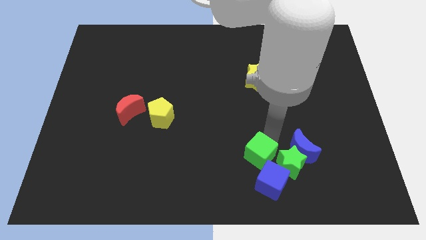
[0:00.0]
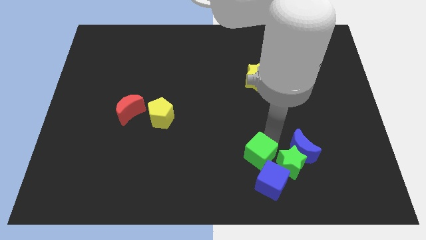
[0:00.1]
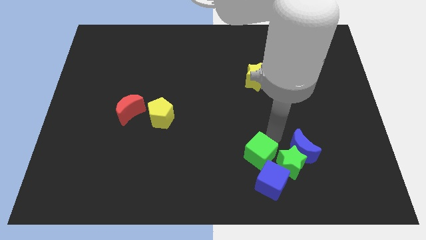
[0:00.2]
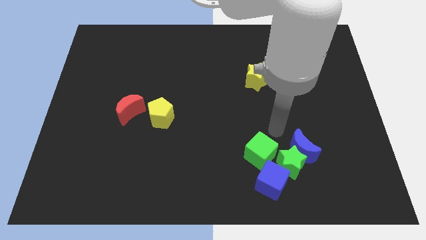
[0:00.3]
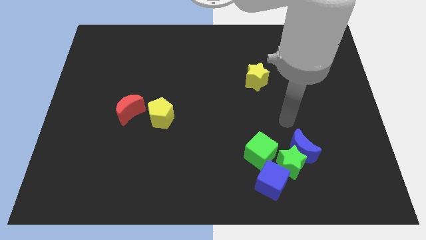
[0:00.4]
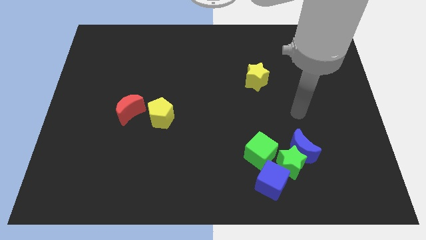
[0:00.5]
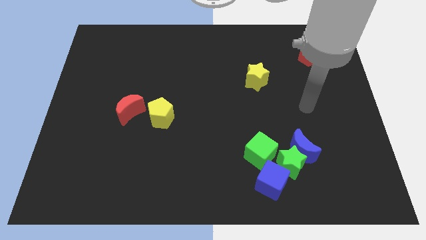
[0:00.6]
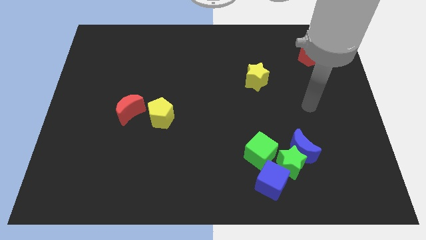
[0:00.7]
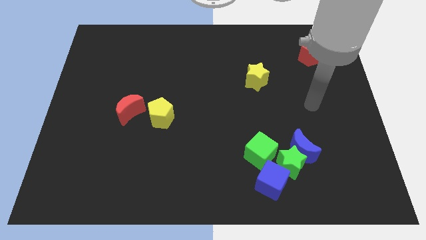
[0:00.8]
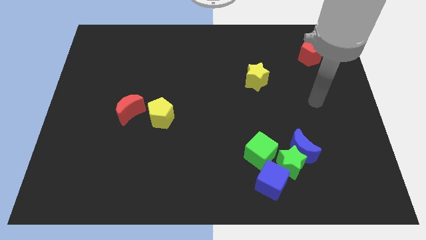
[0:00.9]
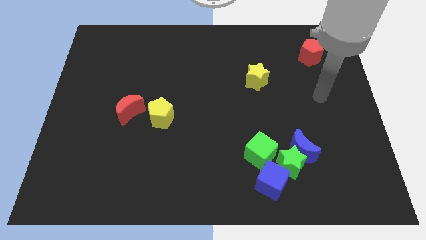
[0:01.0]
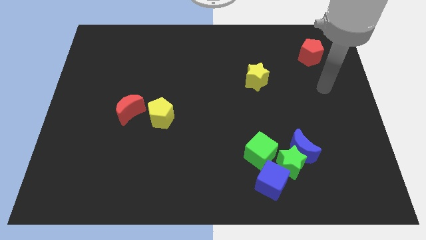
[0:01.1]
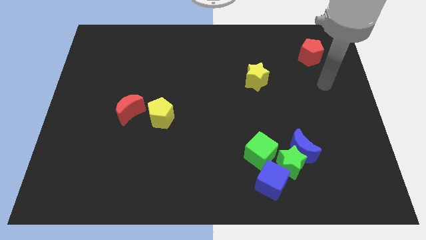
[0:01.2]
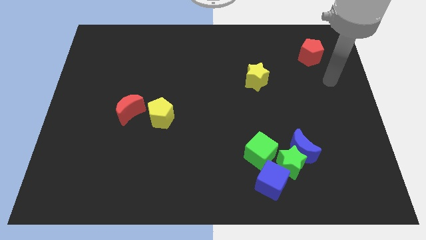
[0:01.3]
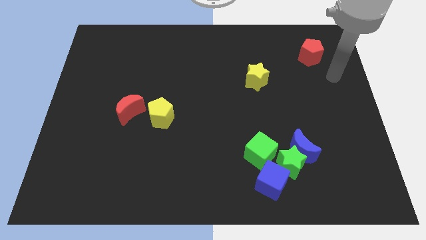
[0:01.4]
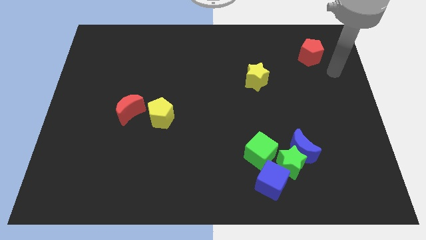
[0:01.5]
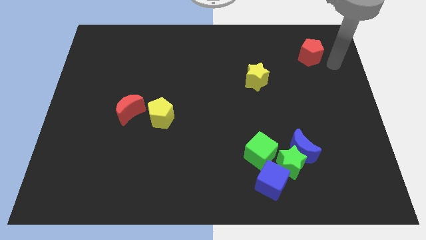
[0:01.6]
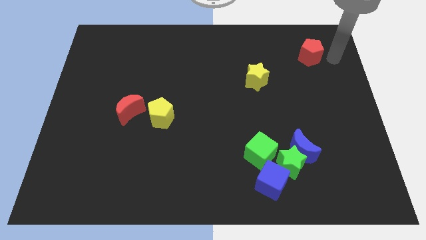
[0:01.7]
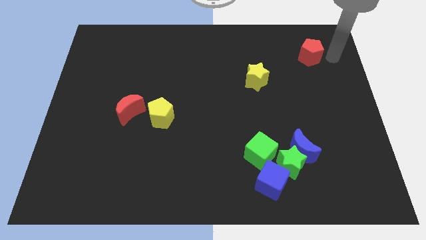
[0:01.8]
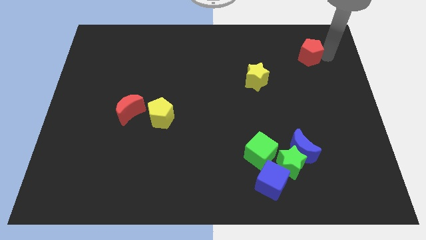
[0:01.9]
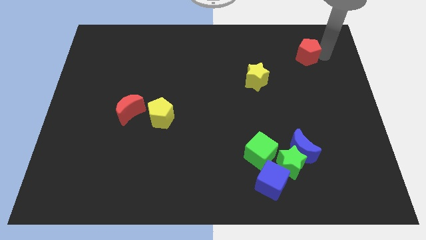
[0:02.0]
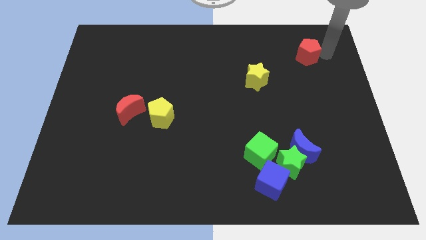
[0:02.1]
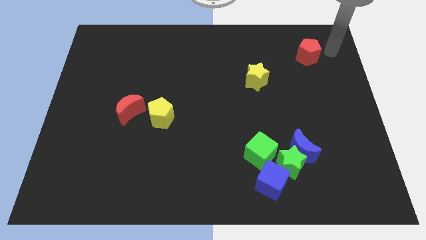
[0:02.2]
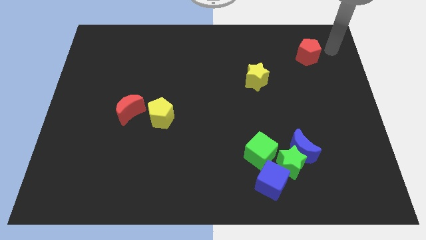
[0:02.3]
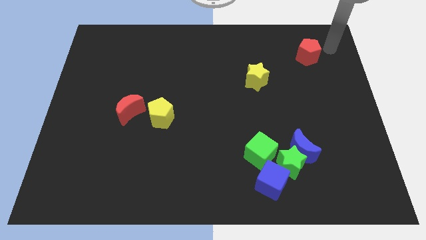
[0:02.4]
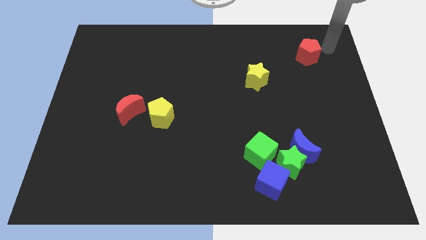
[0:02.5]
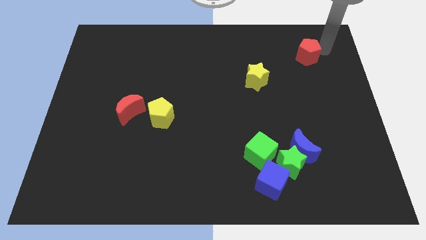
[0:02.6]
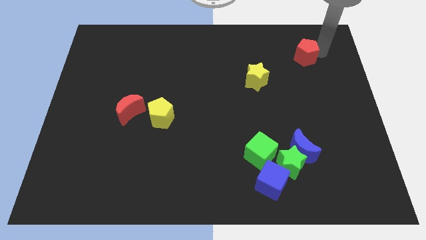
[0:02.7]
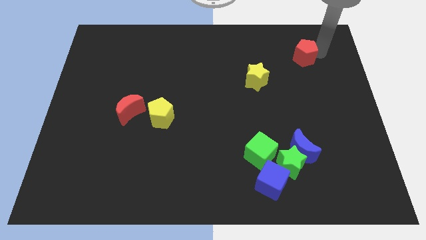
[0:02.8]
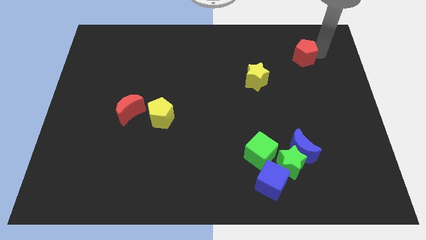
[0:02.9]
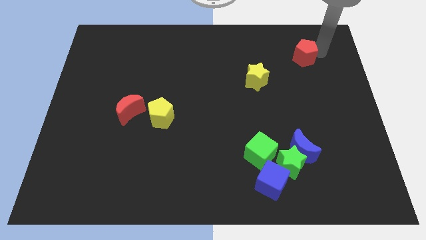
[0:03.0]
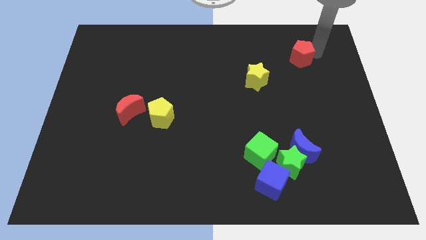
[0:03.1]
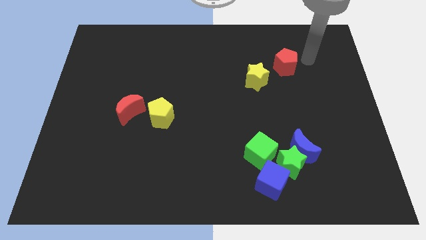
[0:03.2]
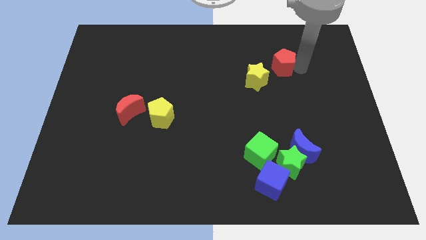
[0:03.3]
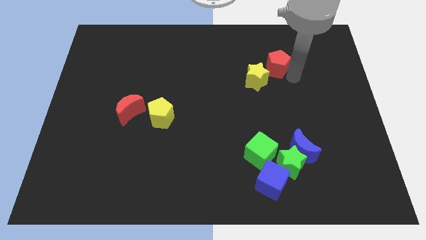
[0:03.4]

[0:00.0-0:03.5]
place the red pentagon vertically above the green star

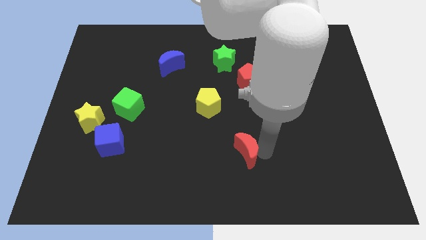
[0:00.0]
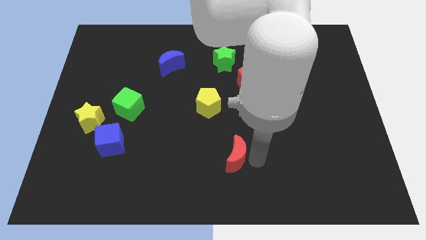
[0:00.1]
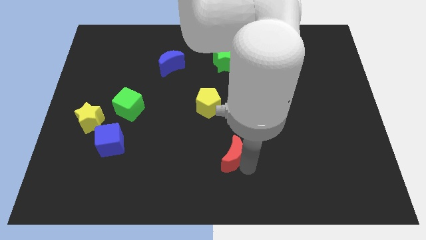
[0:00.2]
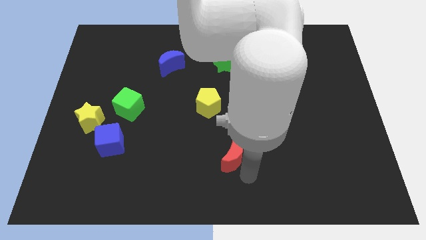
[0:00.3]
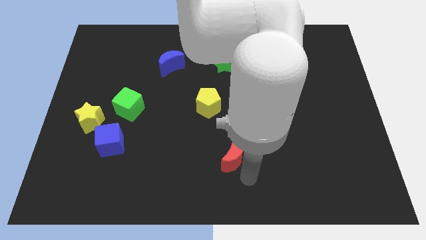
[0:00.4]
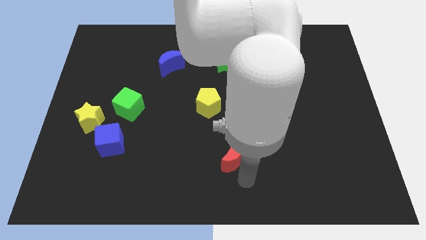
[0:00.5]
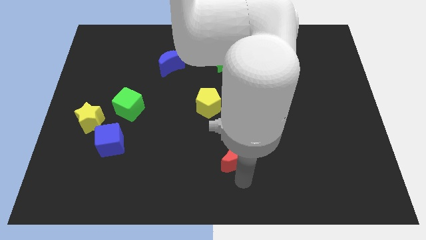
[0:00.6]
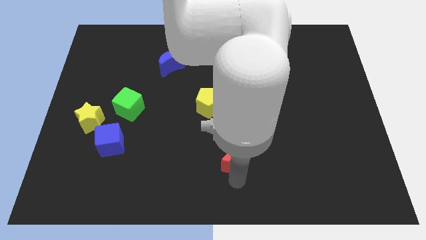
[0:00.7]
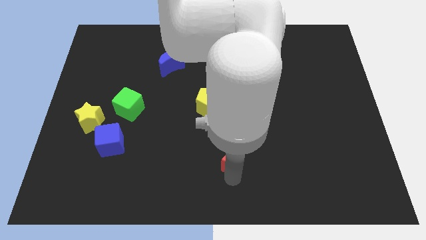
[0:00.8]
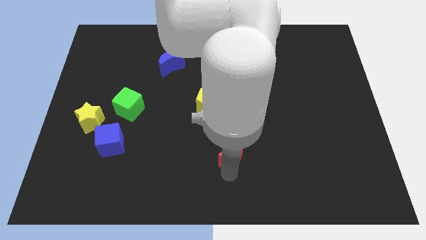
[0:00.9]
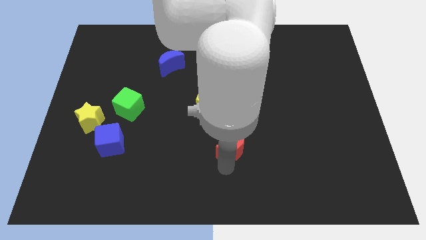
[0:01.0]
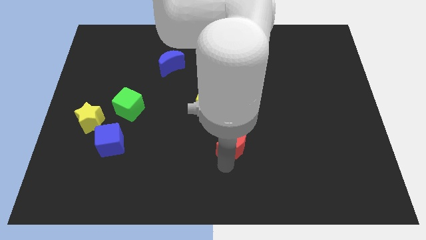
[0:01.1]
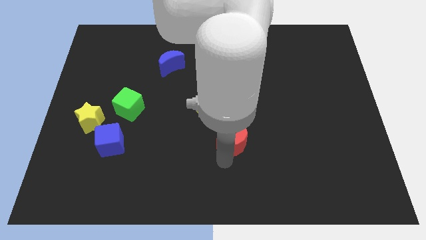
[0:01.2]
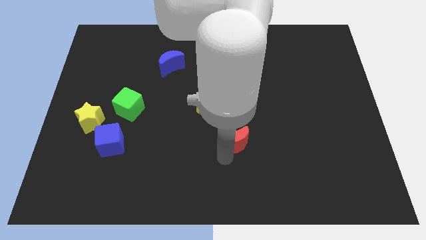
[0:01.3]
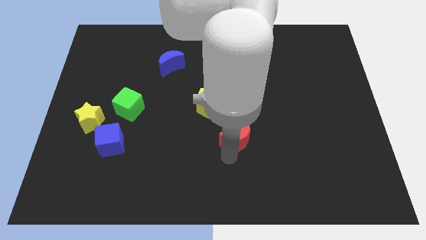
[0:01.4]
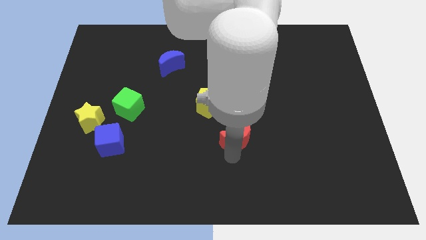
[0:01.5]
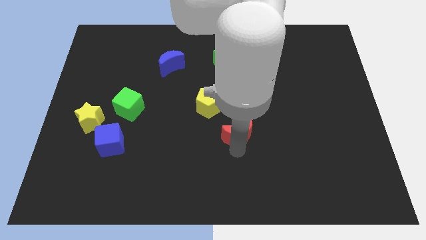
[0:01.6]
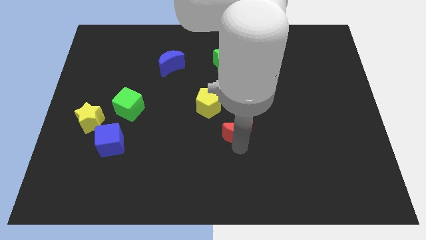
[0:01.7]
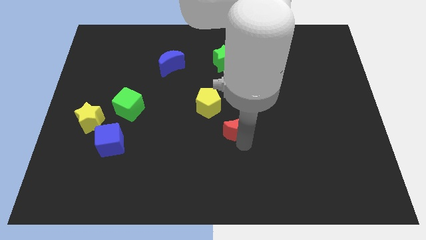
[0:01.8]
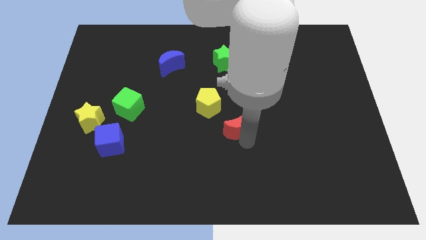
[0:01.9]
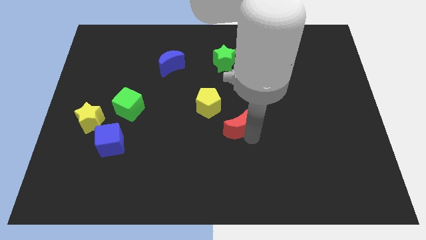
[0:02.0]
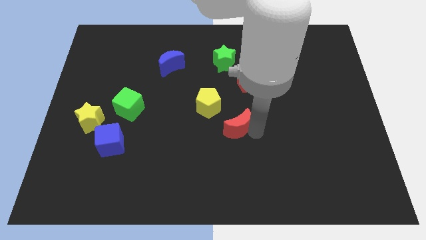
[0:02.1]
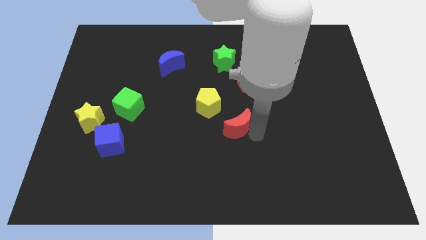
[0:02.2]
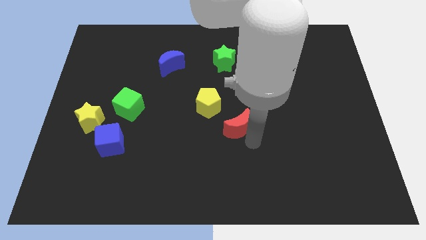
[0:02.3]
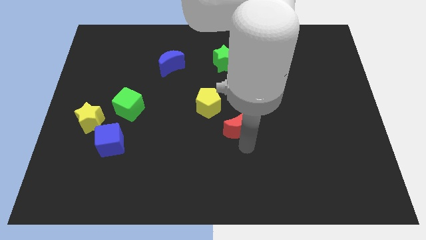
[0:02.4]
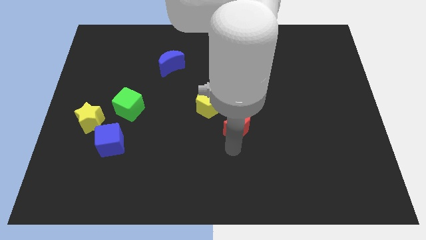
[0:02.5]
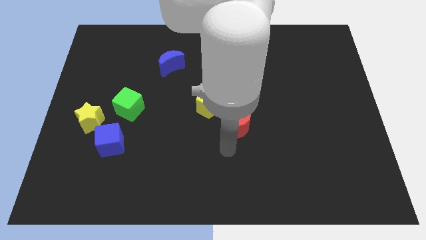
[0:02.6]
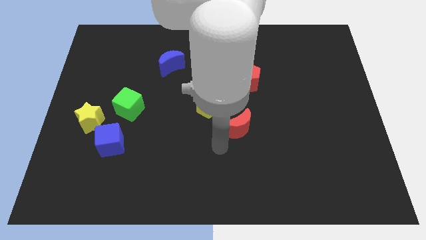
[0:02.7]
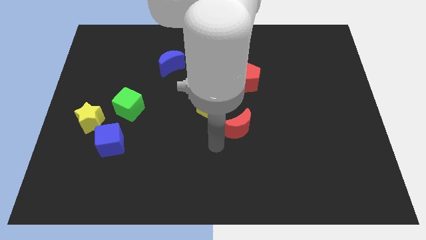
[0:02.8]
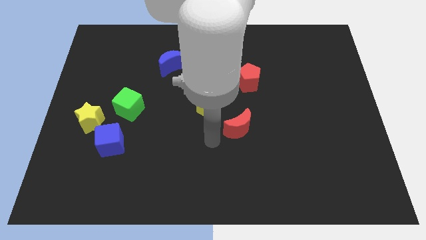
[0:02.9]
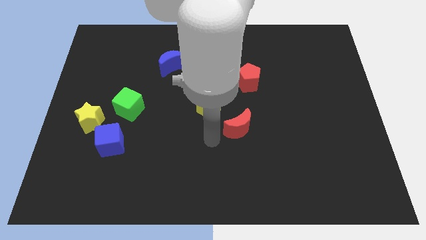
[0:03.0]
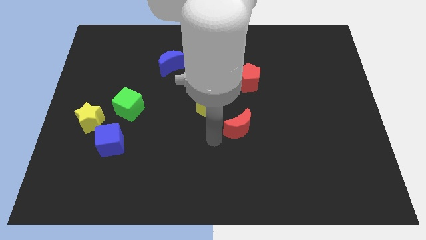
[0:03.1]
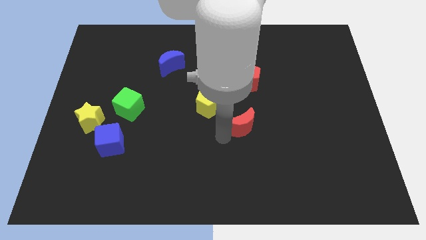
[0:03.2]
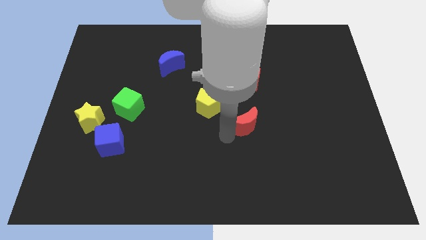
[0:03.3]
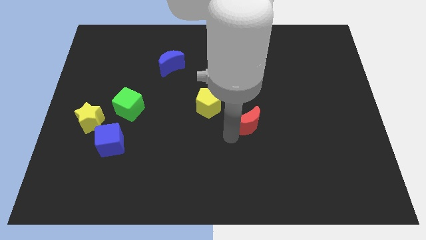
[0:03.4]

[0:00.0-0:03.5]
place the red moon below the red pentagon

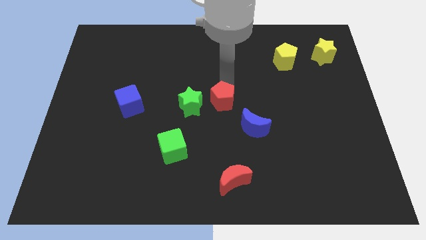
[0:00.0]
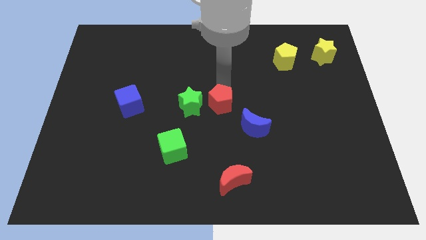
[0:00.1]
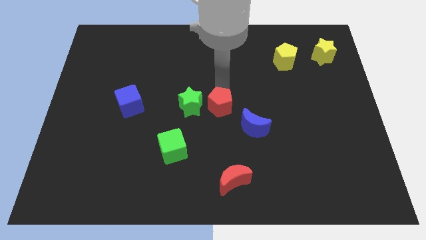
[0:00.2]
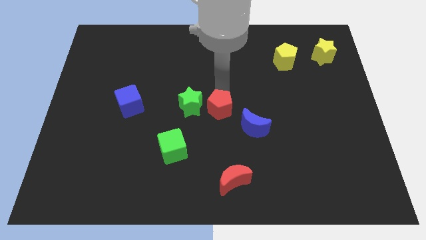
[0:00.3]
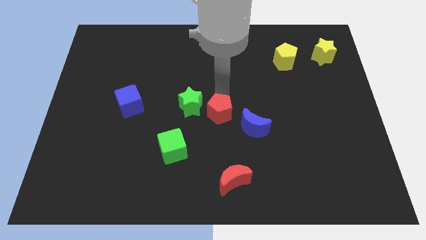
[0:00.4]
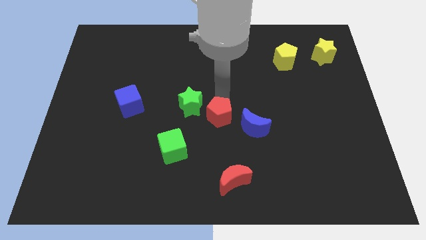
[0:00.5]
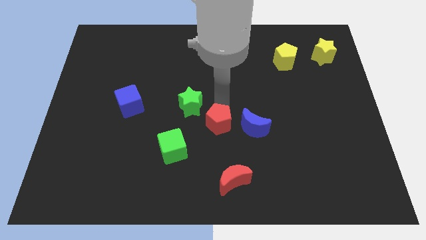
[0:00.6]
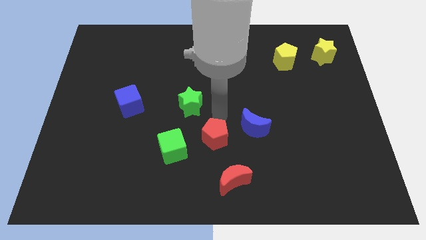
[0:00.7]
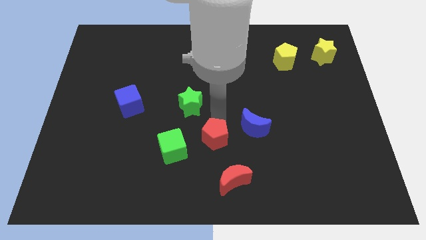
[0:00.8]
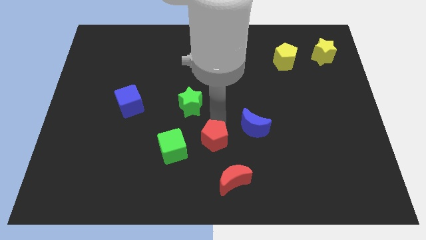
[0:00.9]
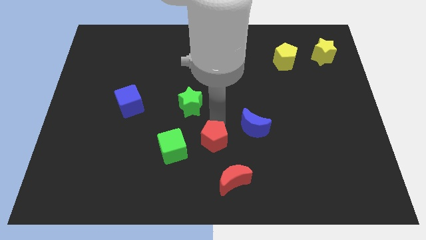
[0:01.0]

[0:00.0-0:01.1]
slightly move down the red pentagon

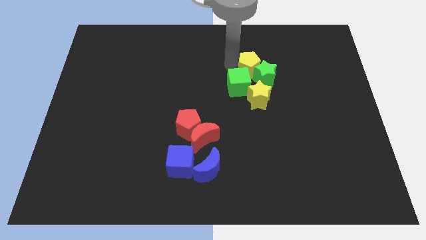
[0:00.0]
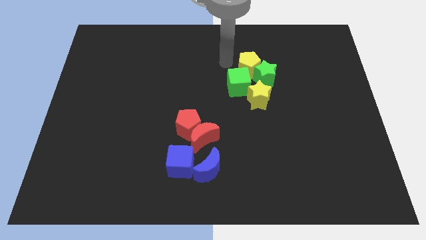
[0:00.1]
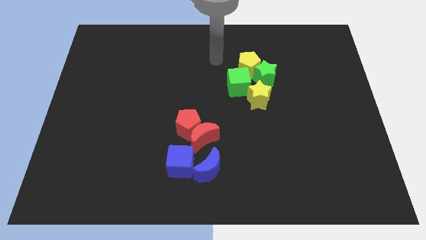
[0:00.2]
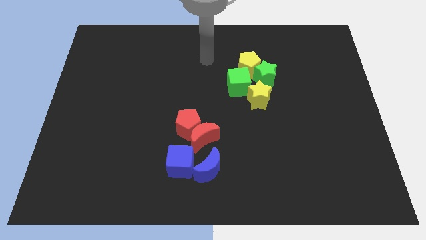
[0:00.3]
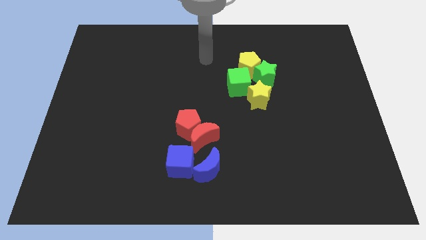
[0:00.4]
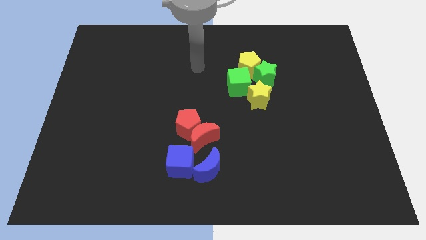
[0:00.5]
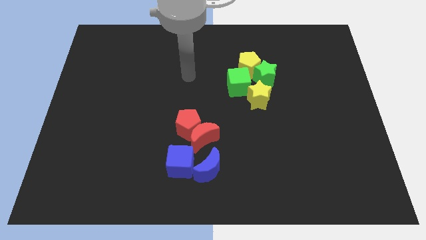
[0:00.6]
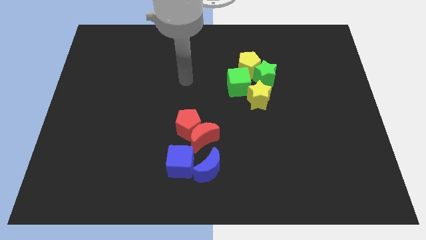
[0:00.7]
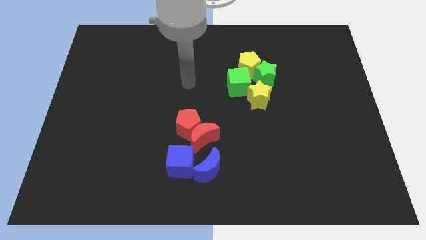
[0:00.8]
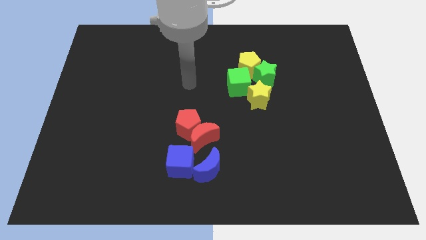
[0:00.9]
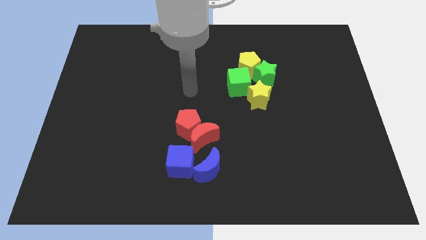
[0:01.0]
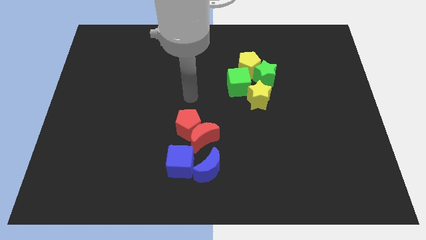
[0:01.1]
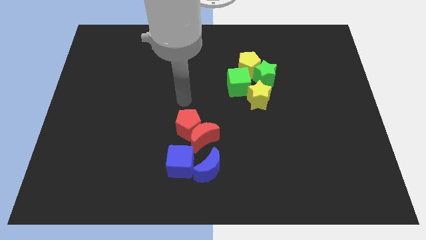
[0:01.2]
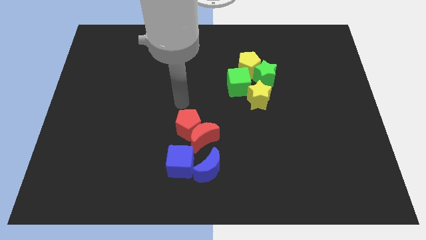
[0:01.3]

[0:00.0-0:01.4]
move your hand away from the green cube
